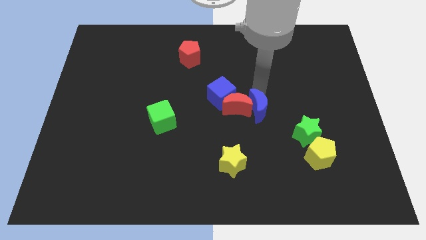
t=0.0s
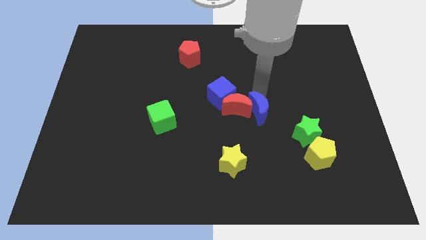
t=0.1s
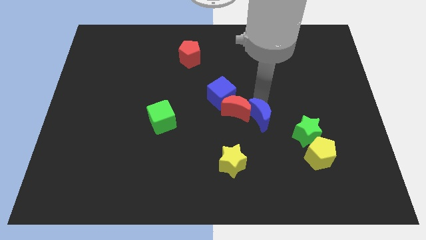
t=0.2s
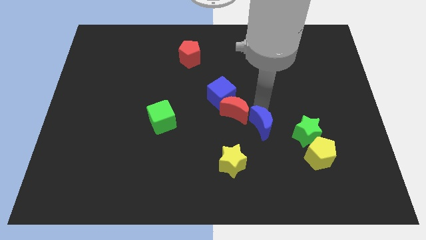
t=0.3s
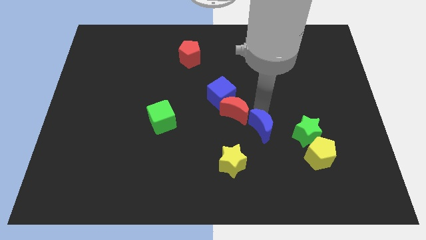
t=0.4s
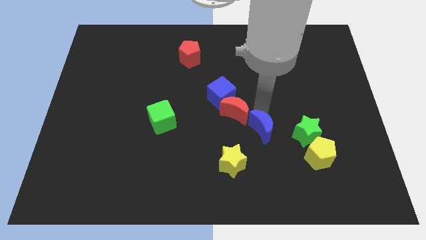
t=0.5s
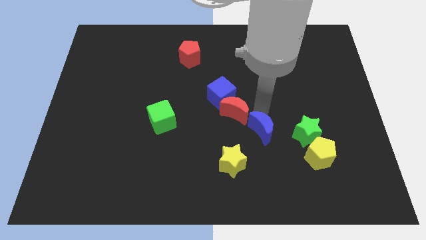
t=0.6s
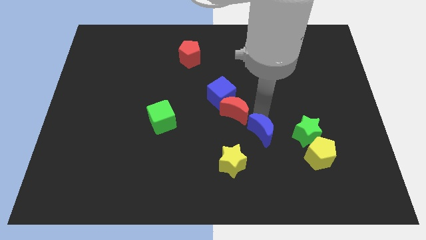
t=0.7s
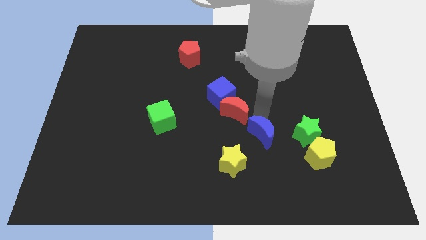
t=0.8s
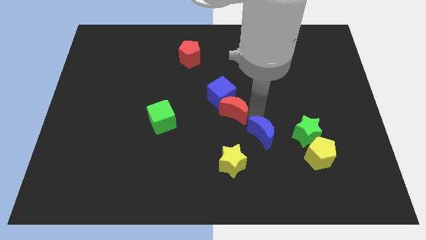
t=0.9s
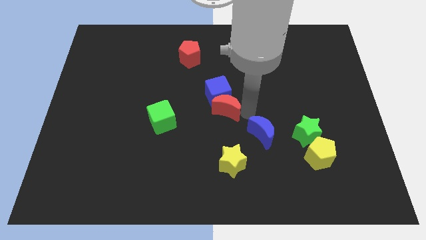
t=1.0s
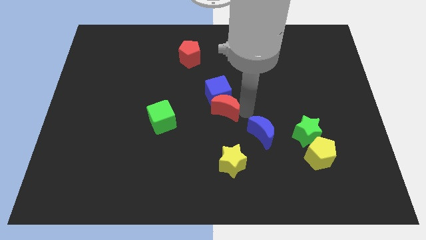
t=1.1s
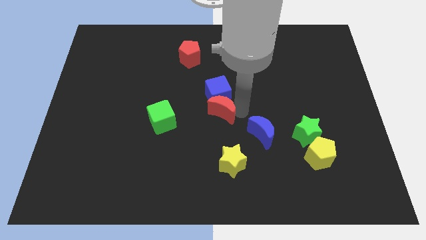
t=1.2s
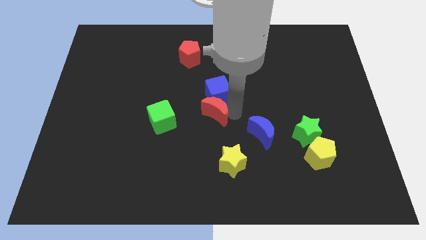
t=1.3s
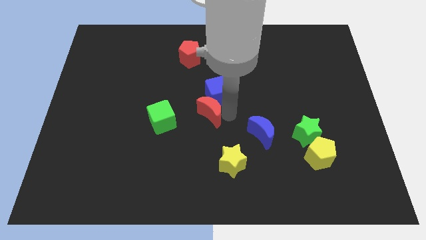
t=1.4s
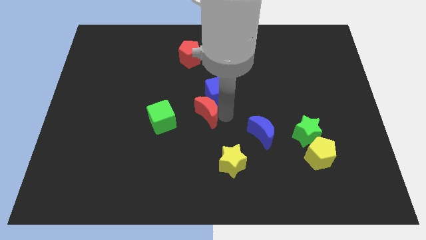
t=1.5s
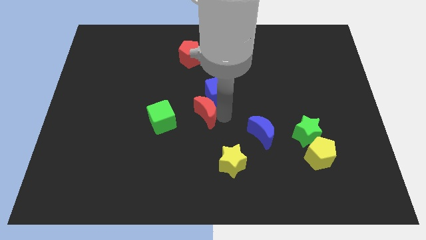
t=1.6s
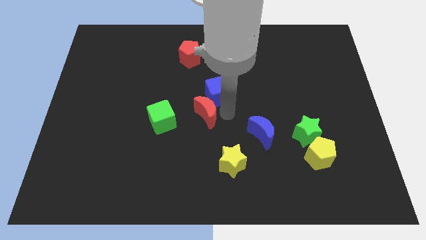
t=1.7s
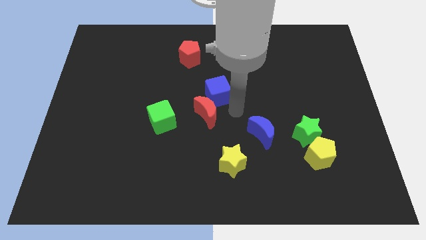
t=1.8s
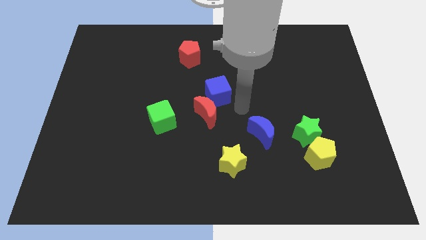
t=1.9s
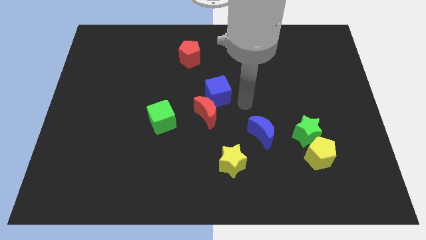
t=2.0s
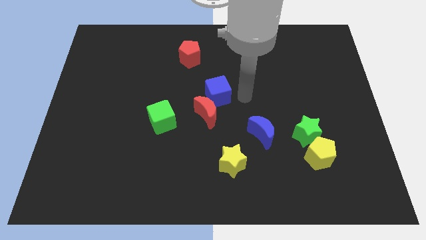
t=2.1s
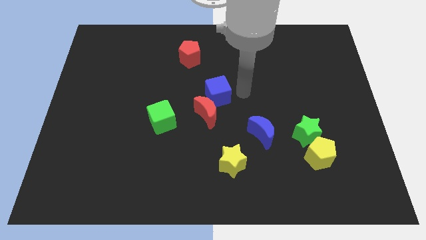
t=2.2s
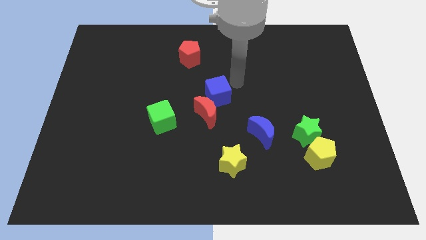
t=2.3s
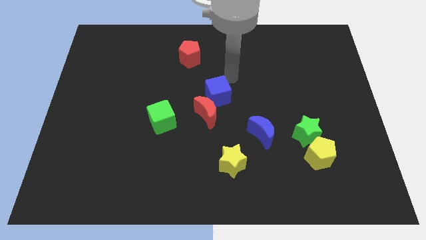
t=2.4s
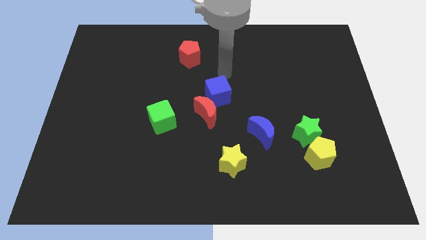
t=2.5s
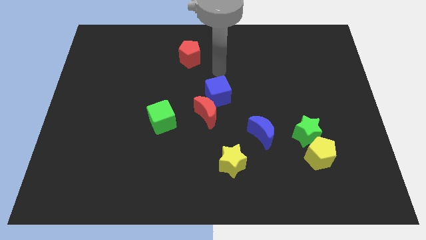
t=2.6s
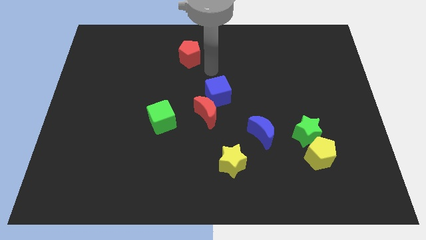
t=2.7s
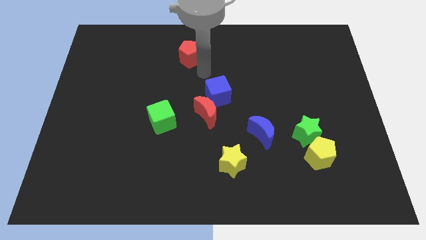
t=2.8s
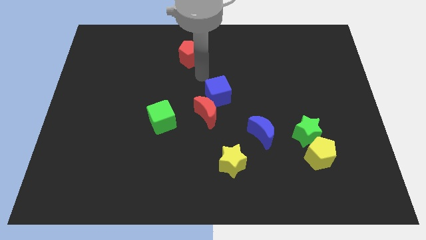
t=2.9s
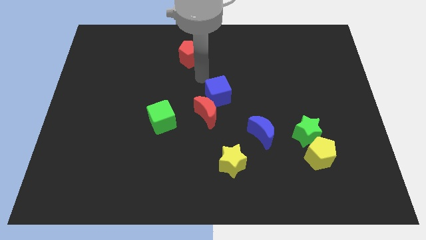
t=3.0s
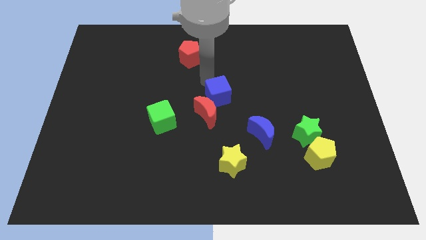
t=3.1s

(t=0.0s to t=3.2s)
separate red crescent and blue crescent from each other

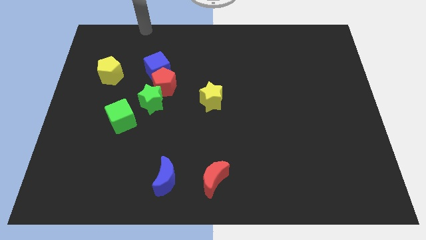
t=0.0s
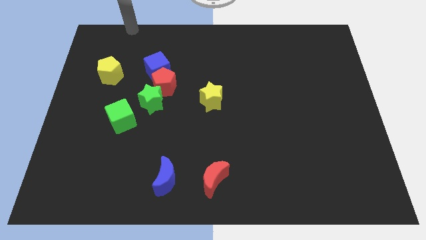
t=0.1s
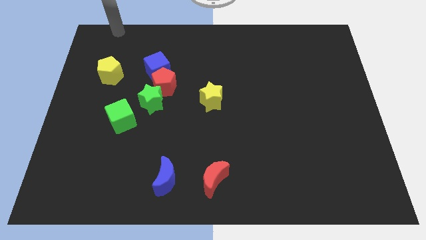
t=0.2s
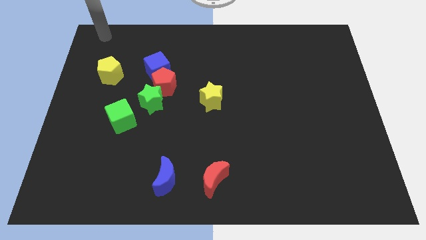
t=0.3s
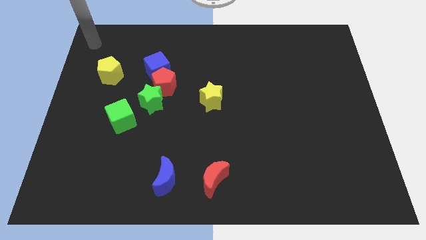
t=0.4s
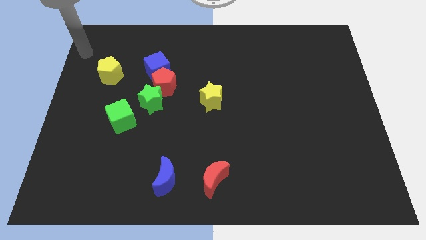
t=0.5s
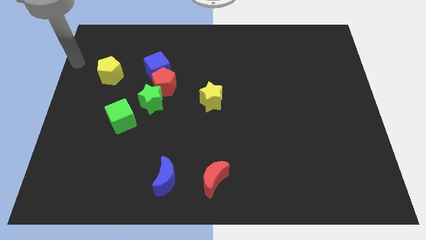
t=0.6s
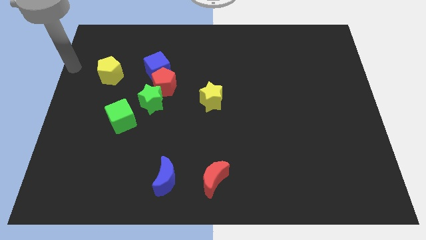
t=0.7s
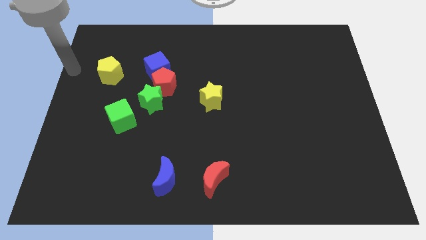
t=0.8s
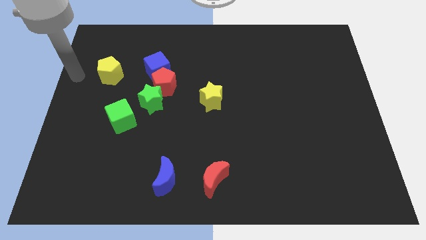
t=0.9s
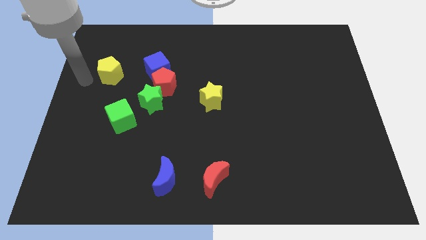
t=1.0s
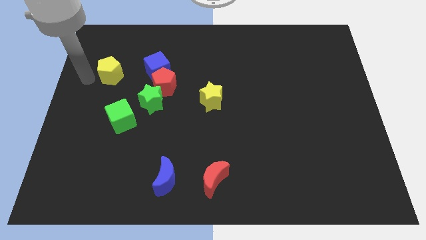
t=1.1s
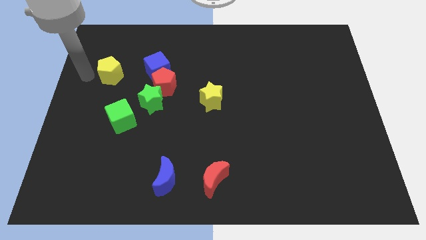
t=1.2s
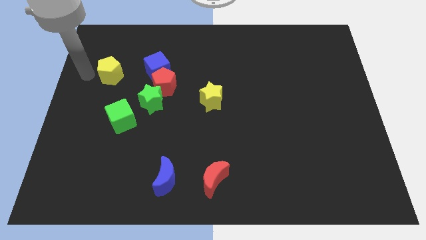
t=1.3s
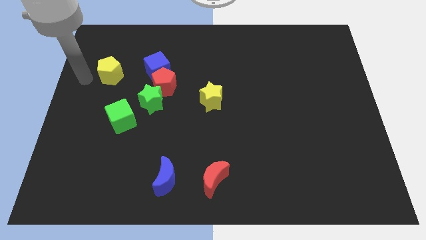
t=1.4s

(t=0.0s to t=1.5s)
place the arm to the left of the yellow pentagon

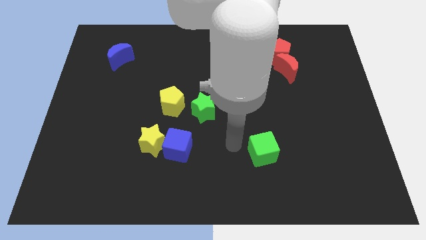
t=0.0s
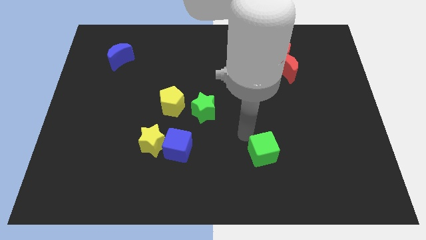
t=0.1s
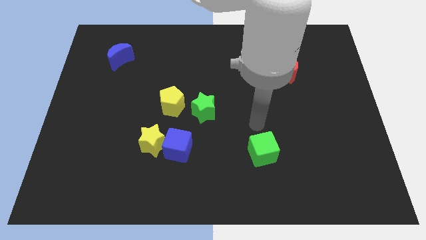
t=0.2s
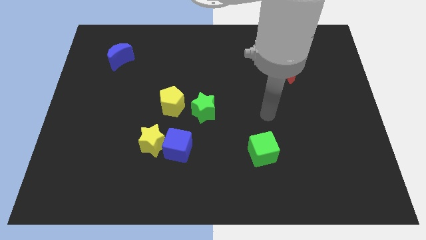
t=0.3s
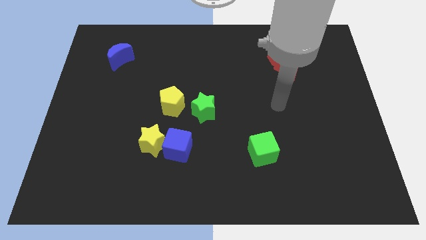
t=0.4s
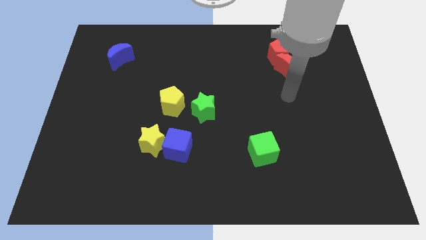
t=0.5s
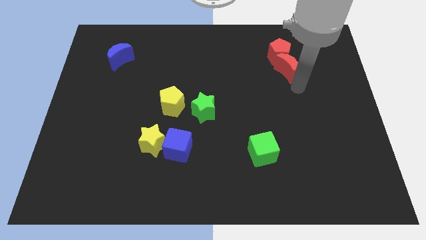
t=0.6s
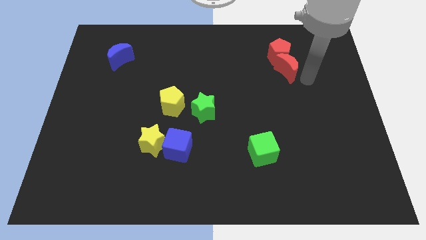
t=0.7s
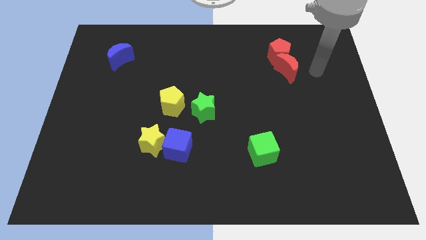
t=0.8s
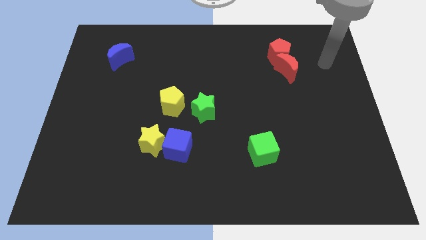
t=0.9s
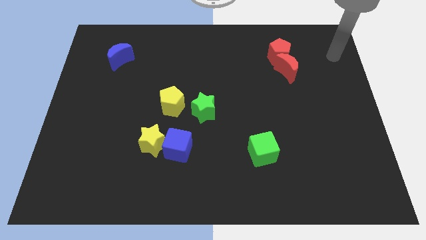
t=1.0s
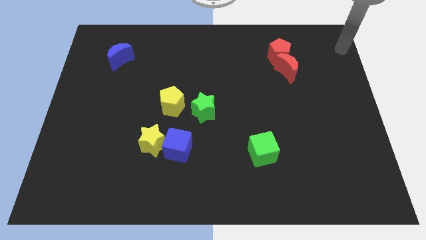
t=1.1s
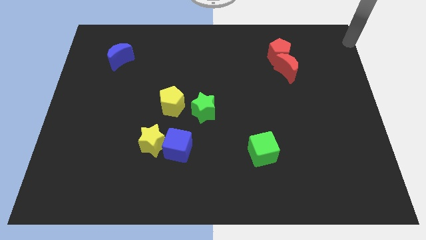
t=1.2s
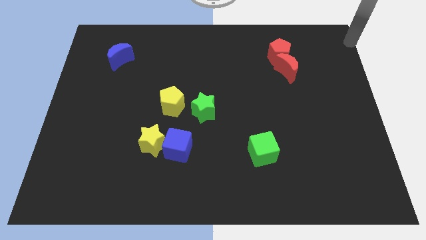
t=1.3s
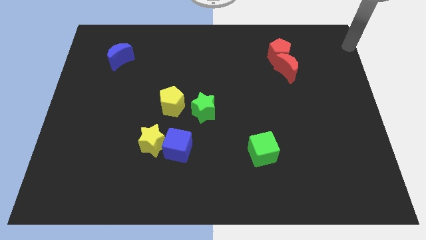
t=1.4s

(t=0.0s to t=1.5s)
place your arm at the top right corner of the board

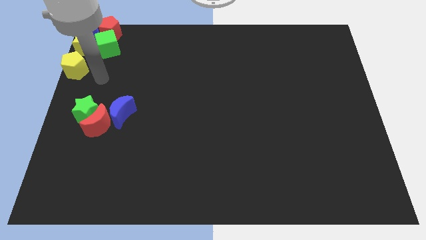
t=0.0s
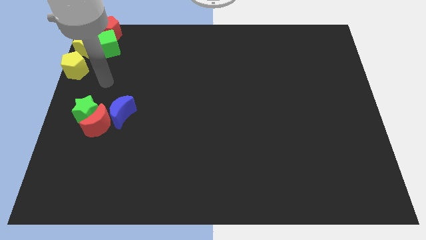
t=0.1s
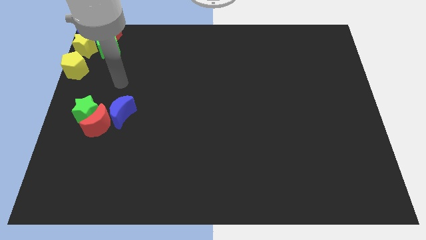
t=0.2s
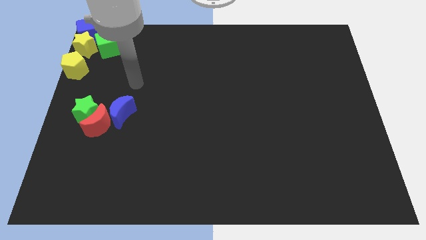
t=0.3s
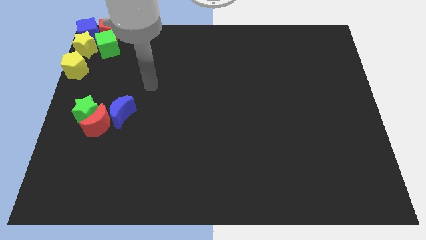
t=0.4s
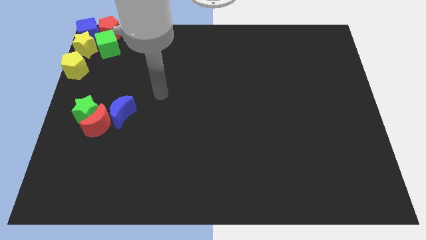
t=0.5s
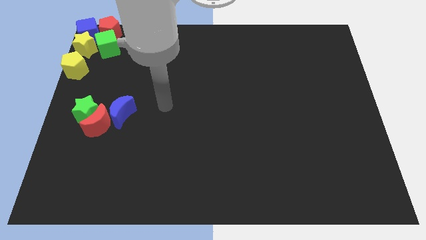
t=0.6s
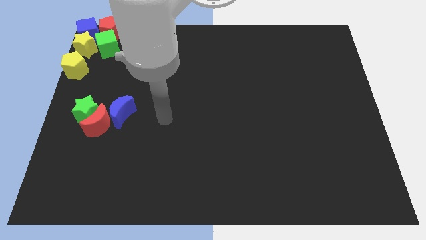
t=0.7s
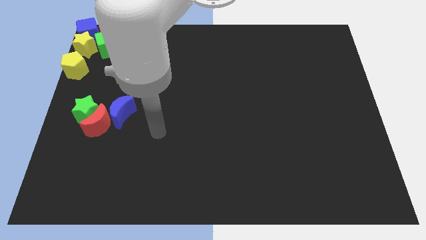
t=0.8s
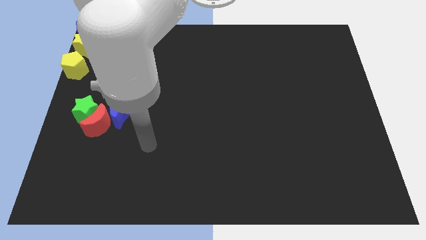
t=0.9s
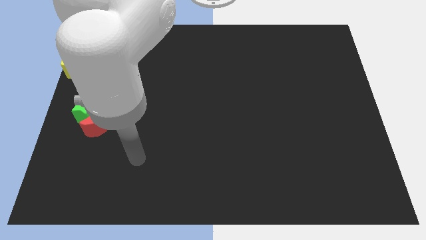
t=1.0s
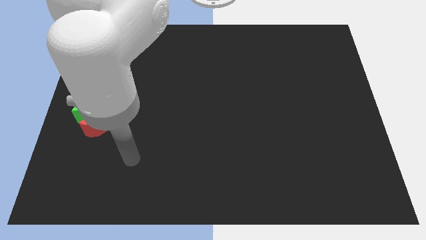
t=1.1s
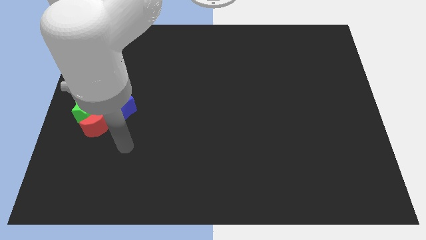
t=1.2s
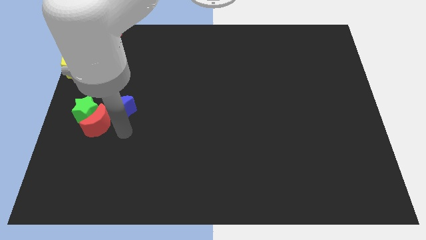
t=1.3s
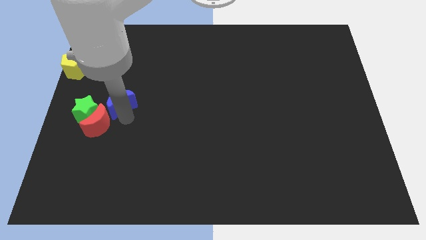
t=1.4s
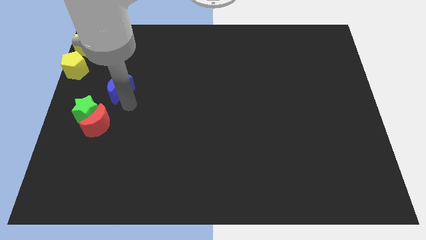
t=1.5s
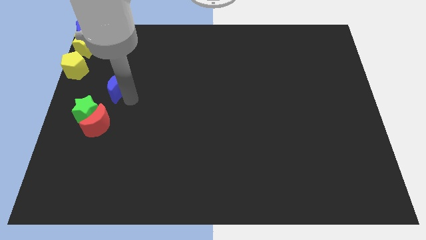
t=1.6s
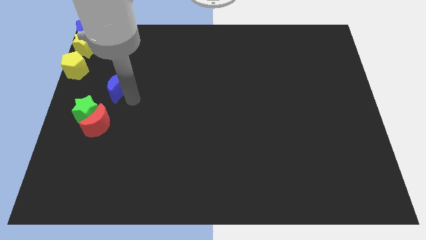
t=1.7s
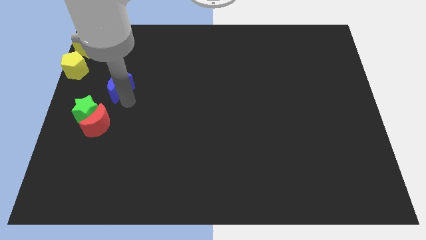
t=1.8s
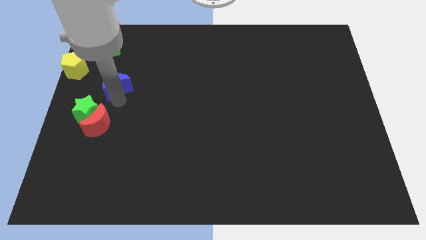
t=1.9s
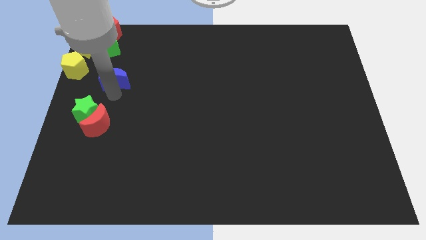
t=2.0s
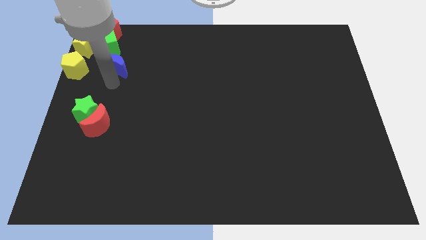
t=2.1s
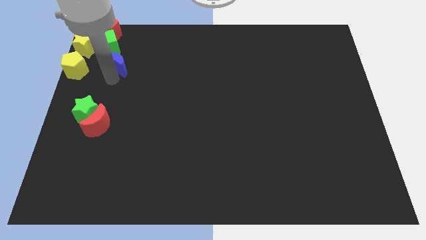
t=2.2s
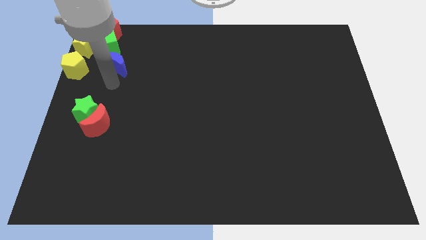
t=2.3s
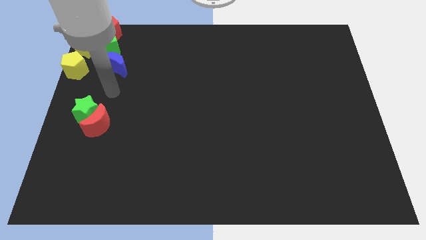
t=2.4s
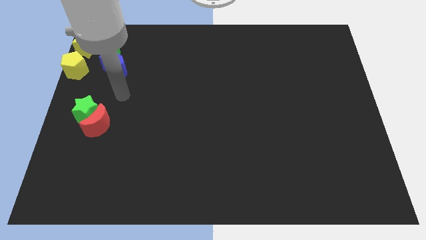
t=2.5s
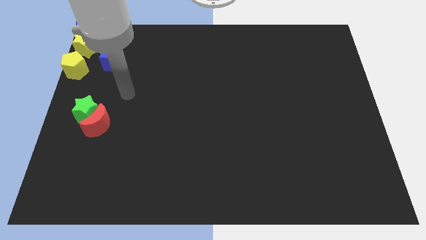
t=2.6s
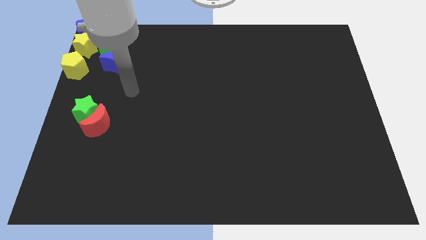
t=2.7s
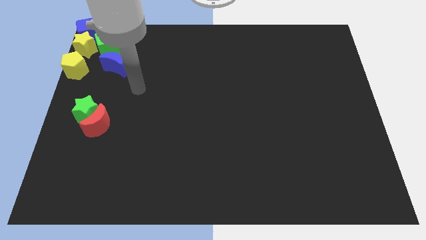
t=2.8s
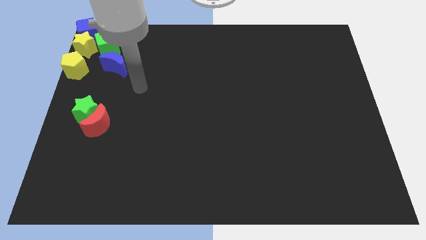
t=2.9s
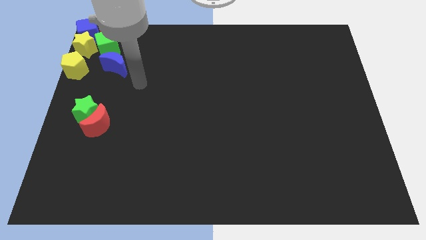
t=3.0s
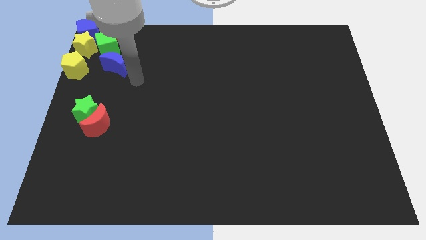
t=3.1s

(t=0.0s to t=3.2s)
put the blue crescent at the bottom side of the green cube
